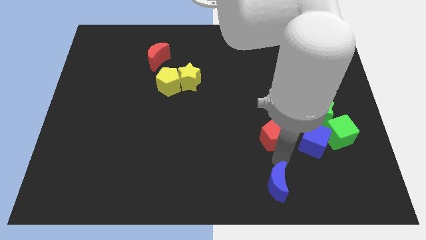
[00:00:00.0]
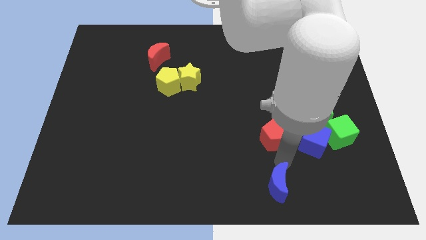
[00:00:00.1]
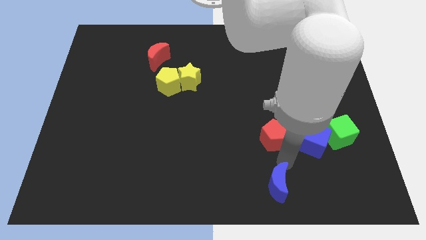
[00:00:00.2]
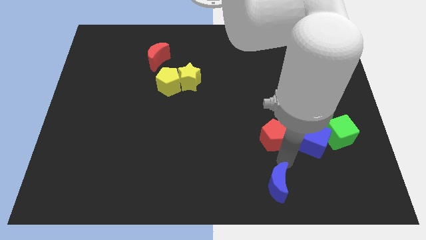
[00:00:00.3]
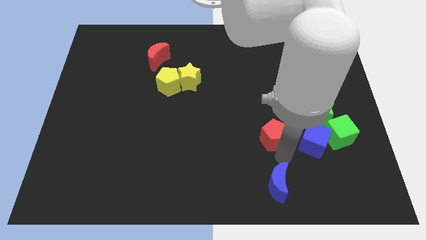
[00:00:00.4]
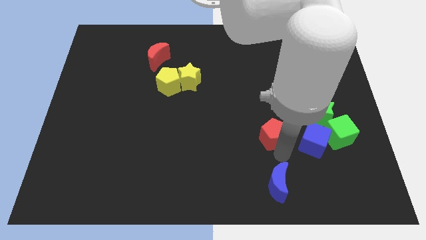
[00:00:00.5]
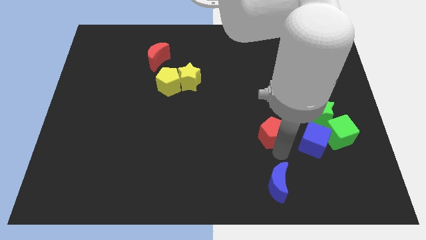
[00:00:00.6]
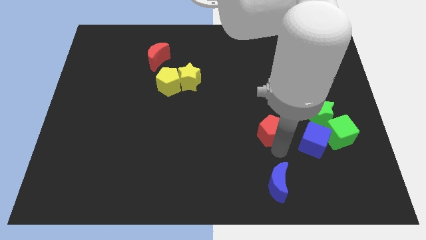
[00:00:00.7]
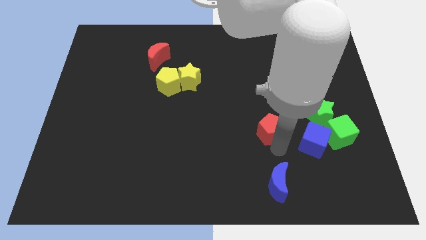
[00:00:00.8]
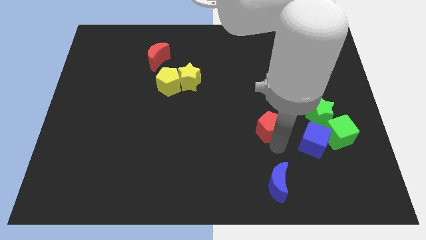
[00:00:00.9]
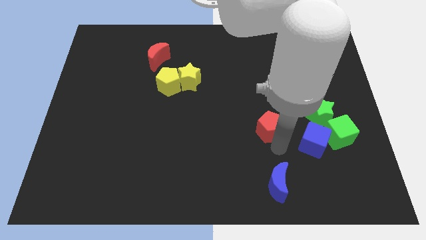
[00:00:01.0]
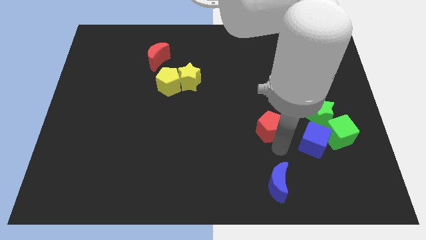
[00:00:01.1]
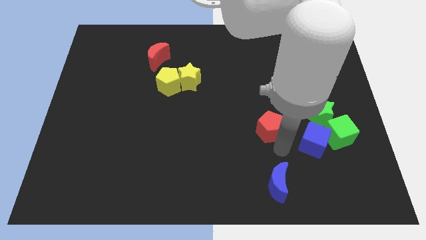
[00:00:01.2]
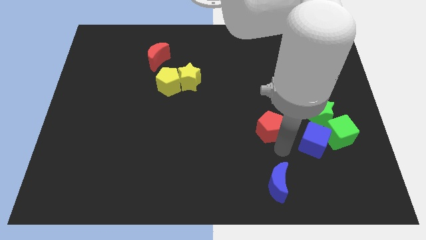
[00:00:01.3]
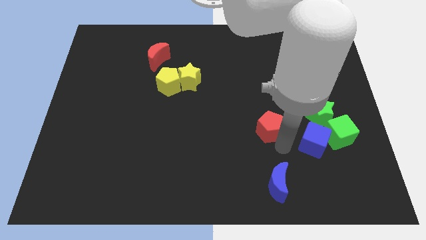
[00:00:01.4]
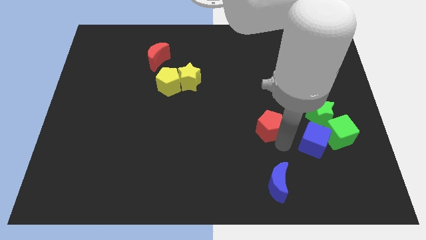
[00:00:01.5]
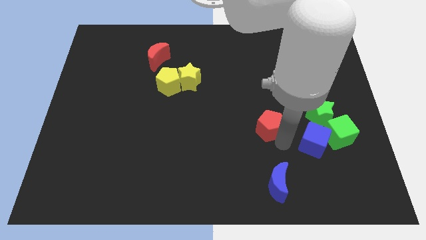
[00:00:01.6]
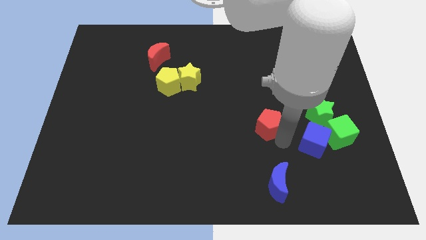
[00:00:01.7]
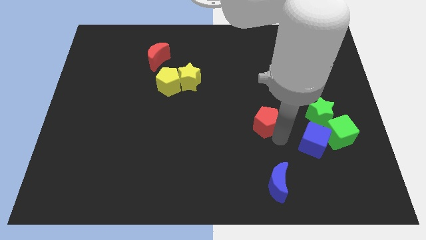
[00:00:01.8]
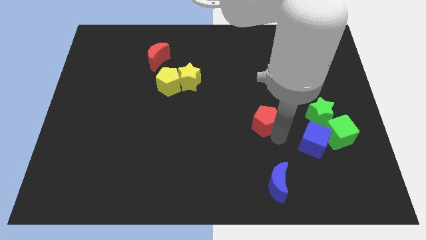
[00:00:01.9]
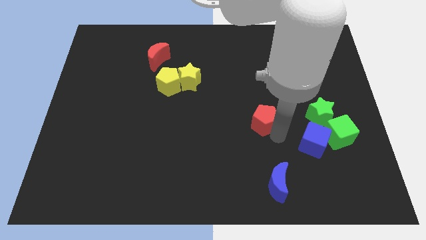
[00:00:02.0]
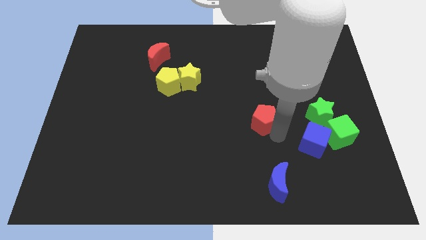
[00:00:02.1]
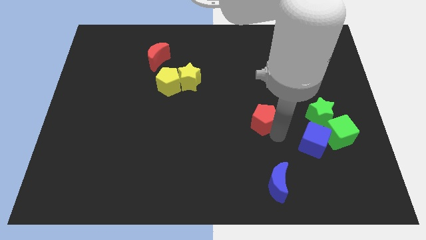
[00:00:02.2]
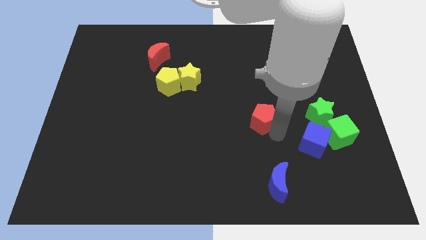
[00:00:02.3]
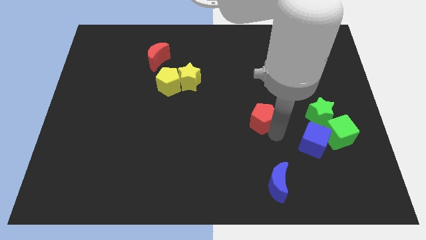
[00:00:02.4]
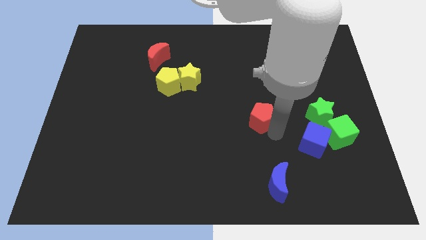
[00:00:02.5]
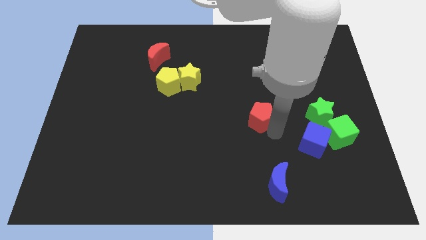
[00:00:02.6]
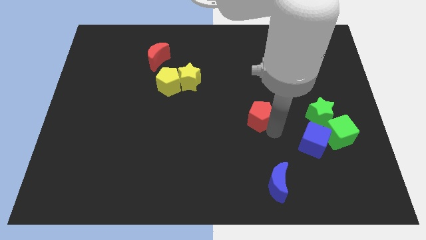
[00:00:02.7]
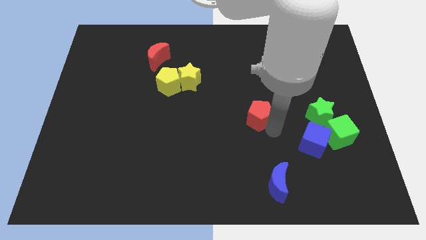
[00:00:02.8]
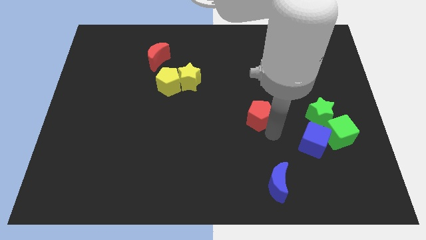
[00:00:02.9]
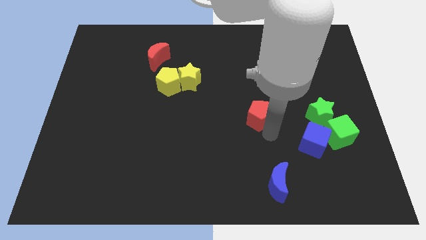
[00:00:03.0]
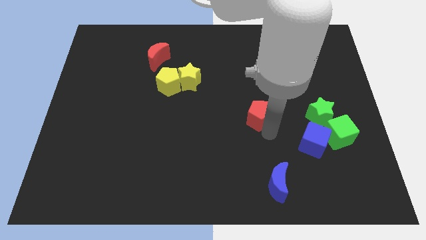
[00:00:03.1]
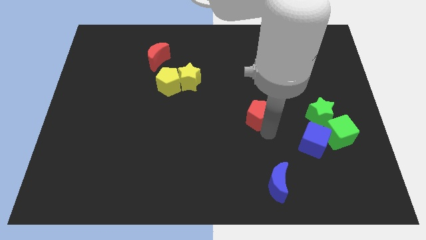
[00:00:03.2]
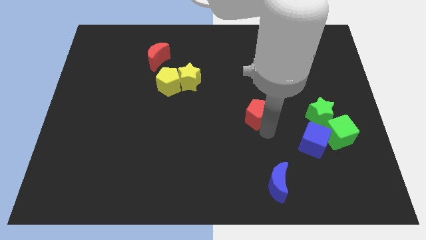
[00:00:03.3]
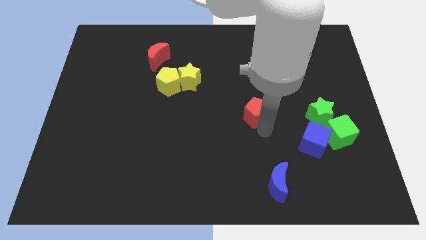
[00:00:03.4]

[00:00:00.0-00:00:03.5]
push the red pentagon to the left of the green star

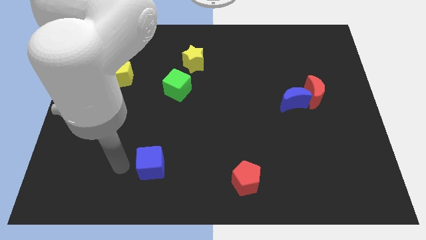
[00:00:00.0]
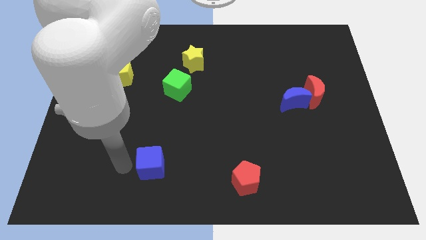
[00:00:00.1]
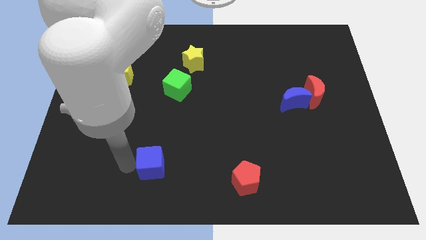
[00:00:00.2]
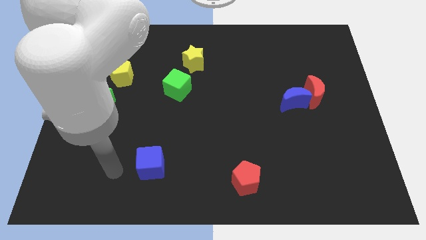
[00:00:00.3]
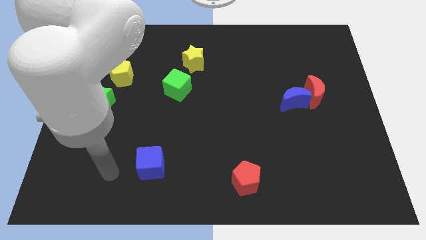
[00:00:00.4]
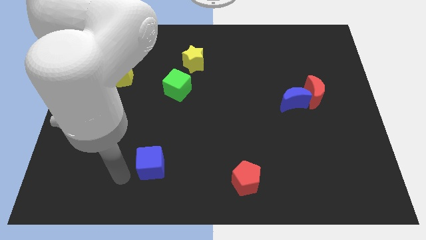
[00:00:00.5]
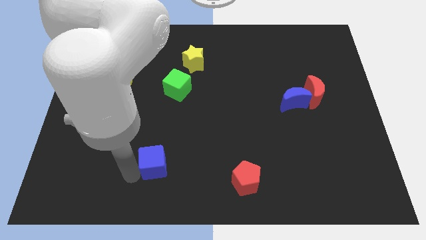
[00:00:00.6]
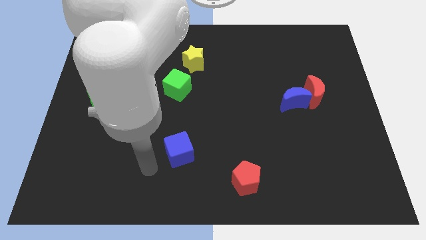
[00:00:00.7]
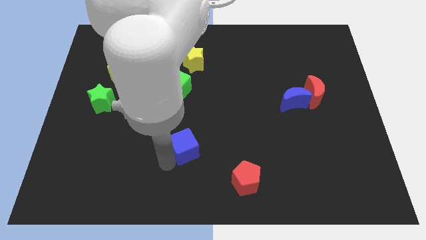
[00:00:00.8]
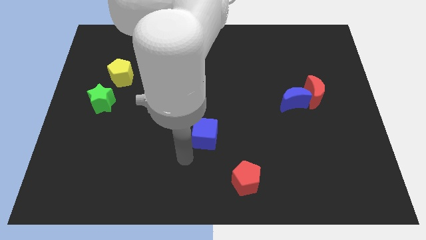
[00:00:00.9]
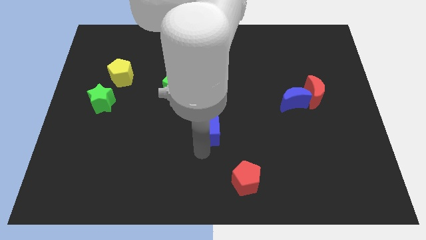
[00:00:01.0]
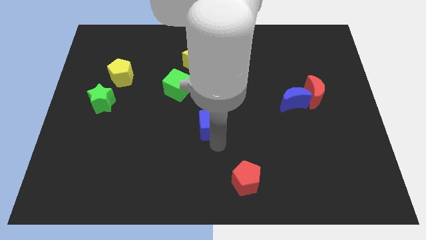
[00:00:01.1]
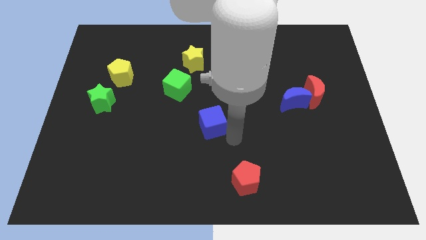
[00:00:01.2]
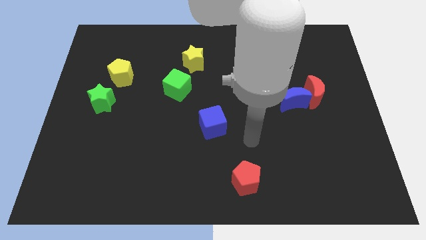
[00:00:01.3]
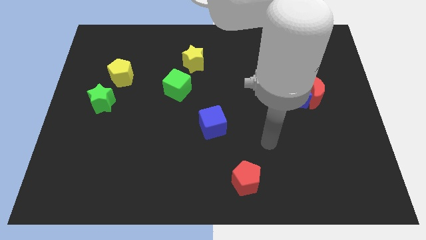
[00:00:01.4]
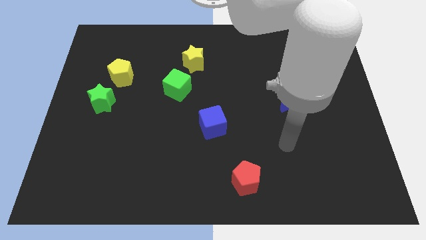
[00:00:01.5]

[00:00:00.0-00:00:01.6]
place the blue cube at the center of the board

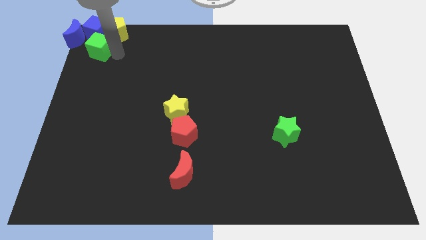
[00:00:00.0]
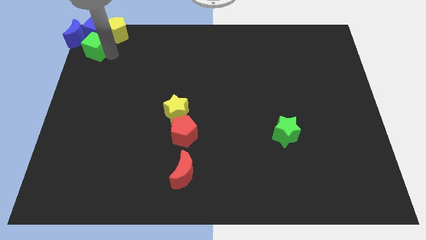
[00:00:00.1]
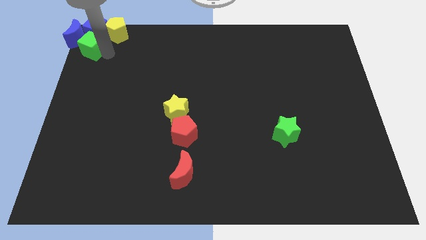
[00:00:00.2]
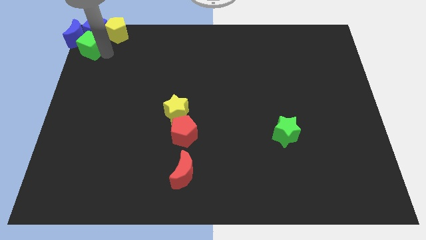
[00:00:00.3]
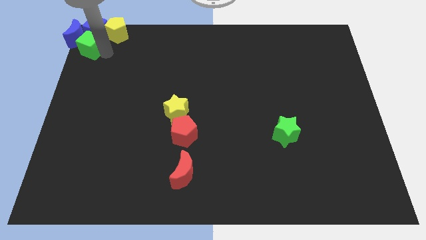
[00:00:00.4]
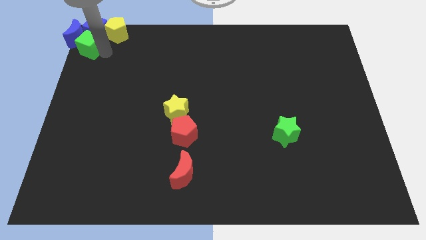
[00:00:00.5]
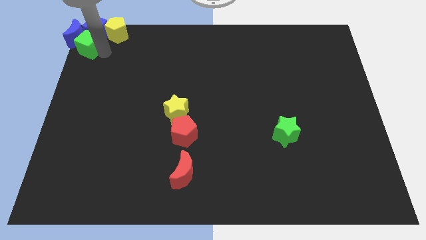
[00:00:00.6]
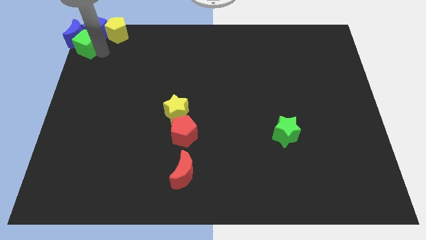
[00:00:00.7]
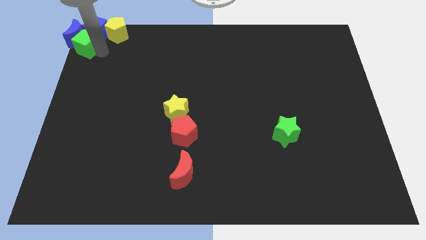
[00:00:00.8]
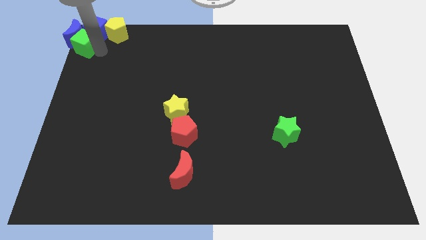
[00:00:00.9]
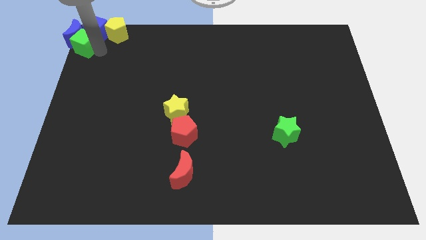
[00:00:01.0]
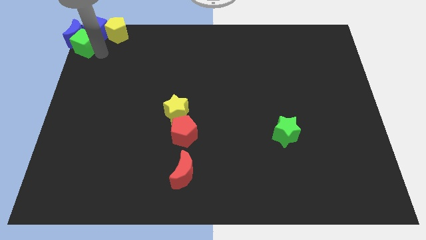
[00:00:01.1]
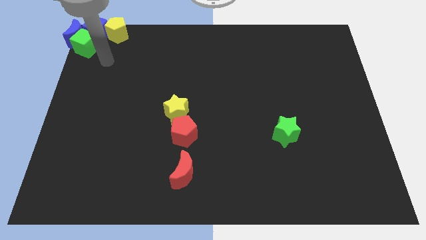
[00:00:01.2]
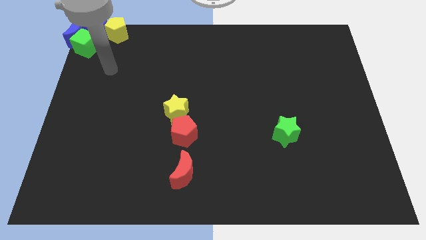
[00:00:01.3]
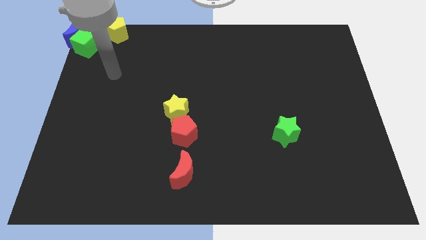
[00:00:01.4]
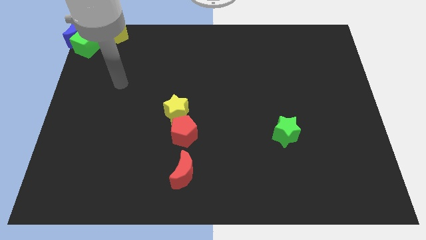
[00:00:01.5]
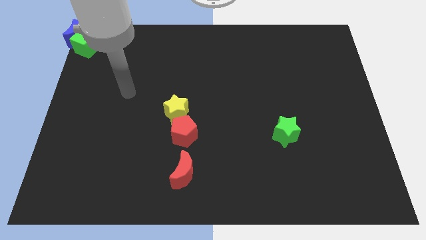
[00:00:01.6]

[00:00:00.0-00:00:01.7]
move the green cube close to the blue crescent

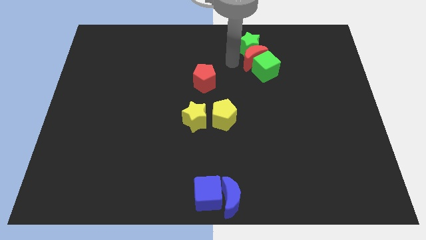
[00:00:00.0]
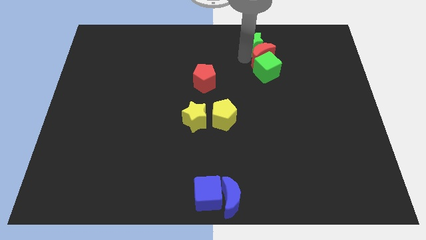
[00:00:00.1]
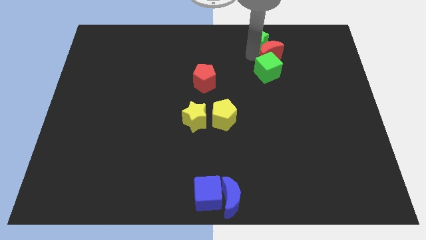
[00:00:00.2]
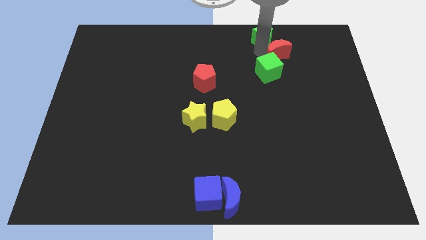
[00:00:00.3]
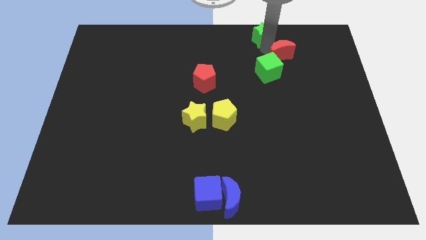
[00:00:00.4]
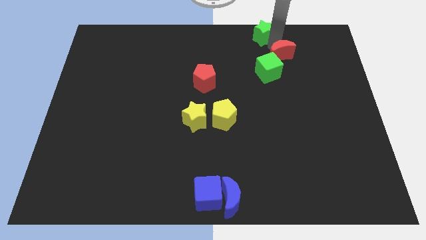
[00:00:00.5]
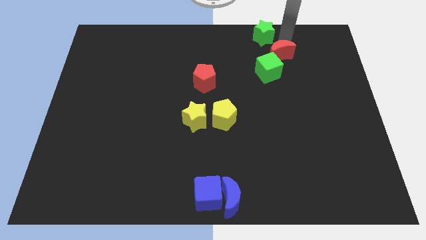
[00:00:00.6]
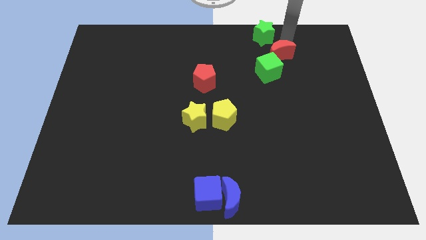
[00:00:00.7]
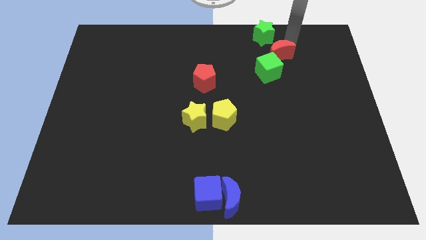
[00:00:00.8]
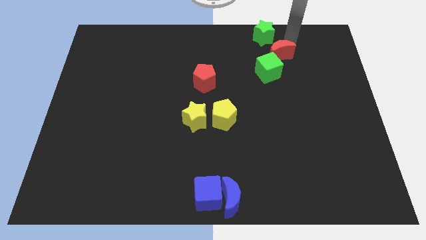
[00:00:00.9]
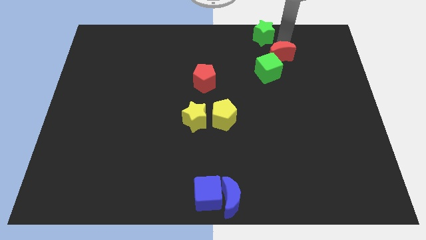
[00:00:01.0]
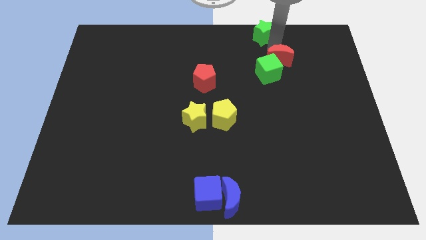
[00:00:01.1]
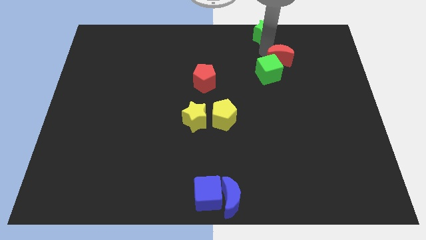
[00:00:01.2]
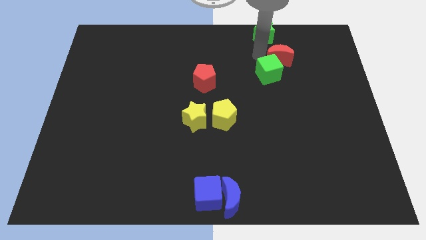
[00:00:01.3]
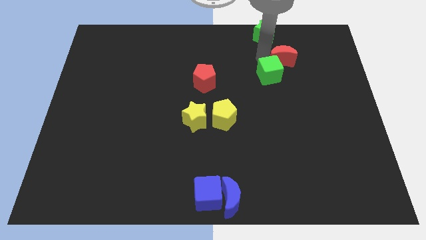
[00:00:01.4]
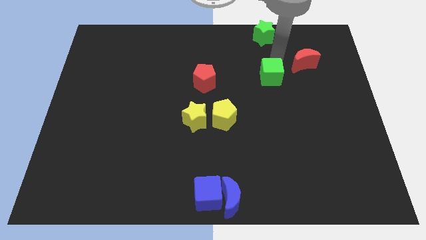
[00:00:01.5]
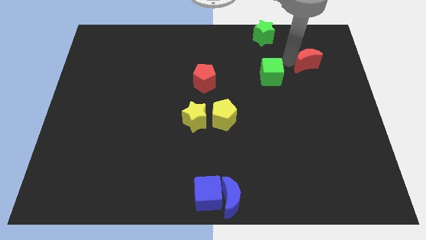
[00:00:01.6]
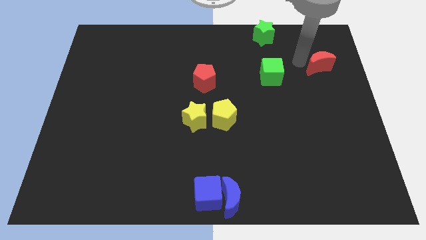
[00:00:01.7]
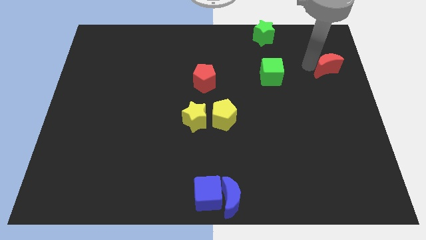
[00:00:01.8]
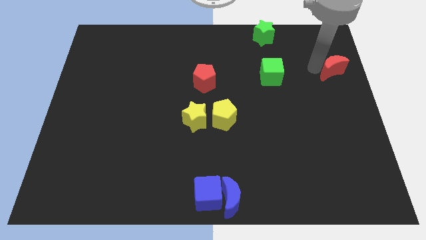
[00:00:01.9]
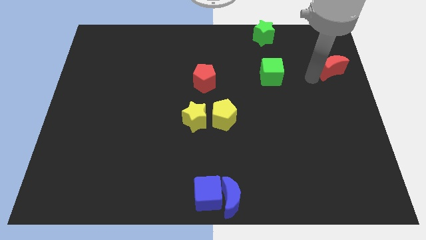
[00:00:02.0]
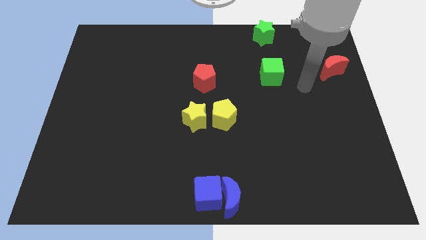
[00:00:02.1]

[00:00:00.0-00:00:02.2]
separate the red moon and green blocks
